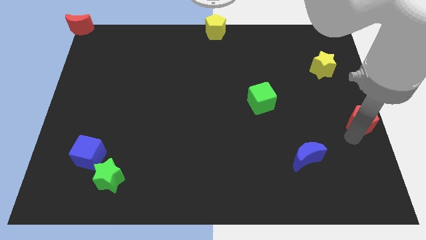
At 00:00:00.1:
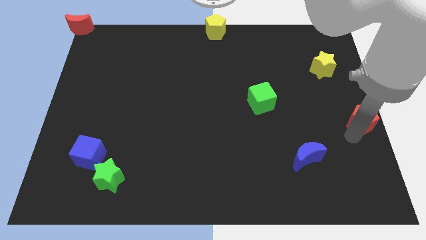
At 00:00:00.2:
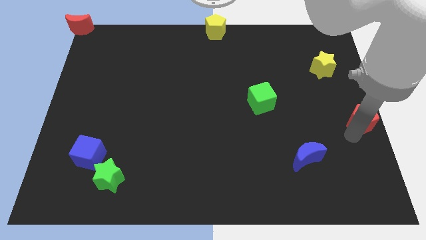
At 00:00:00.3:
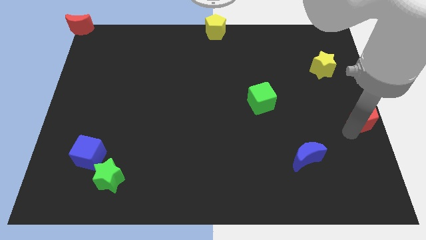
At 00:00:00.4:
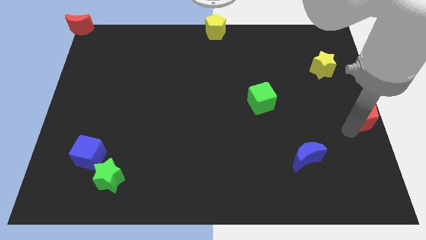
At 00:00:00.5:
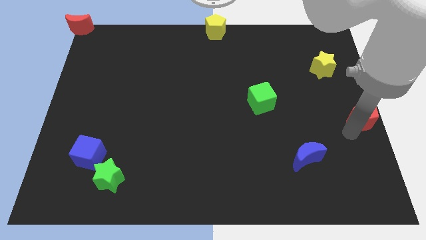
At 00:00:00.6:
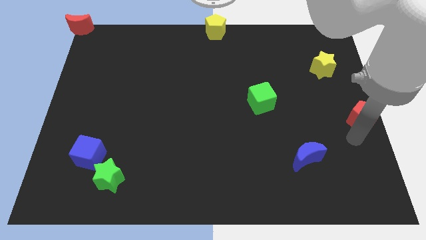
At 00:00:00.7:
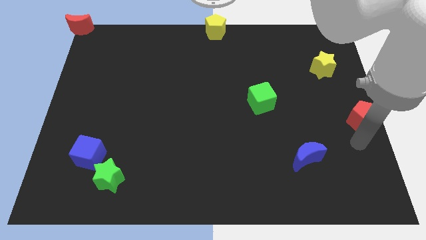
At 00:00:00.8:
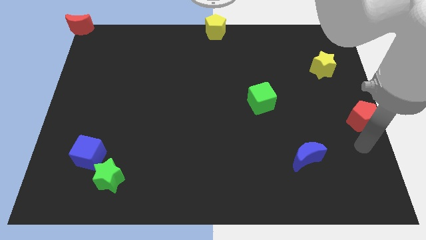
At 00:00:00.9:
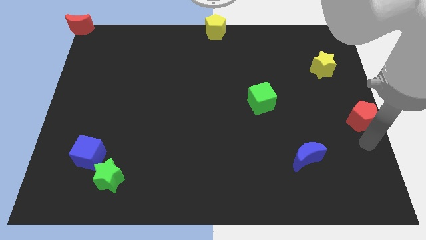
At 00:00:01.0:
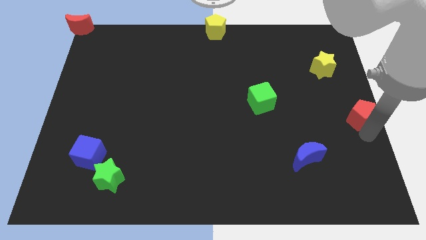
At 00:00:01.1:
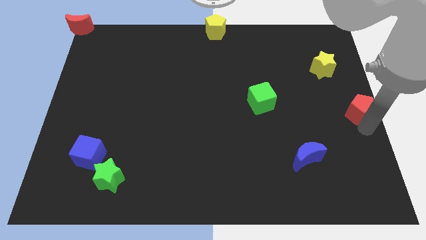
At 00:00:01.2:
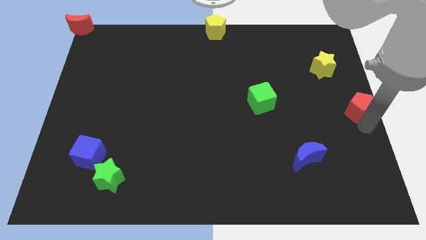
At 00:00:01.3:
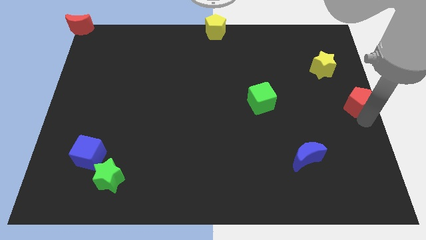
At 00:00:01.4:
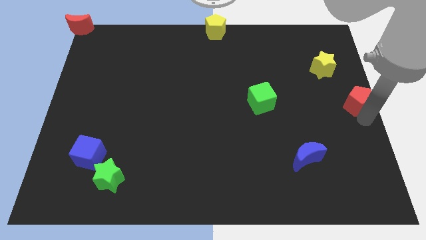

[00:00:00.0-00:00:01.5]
move the red pentagon right center of the board

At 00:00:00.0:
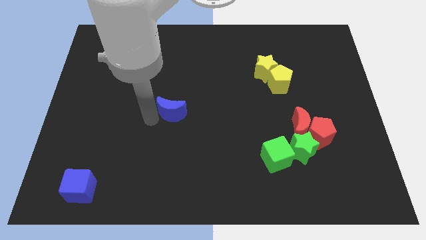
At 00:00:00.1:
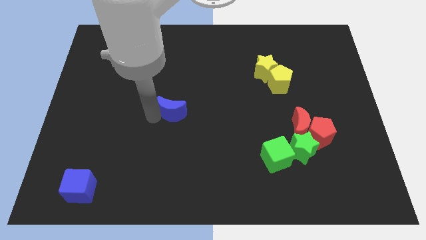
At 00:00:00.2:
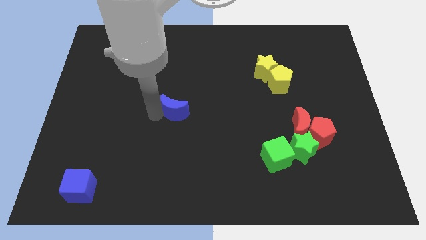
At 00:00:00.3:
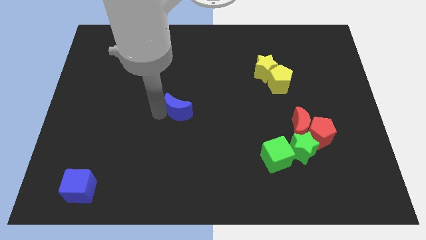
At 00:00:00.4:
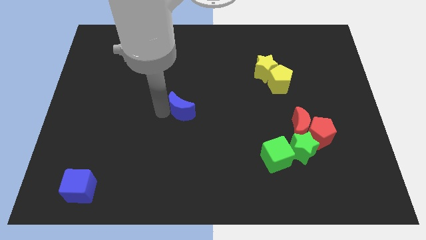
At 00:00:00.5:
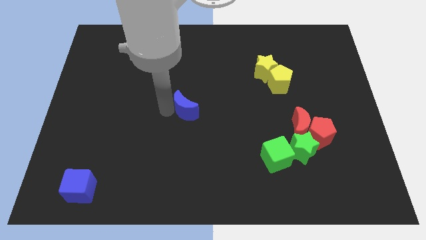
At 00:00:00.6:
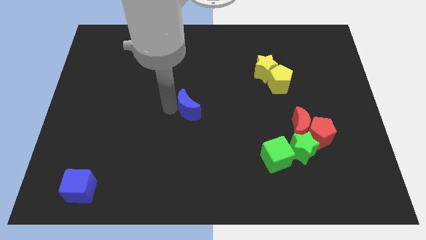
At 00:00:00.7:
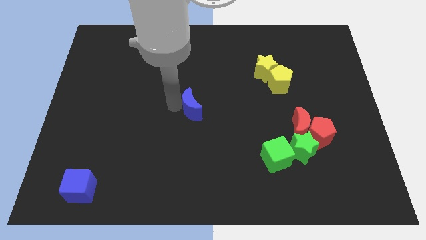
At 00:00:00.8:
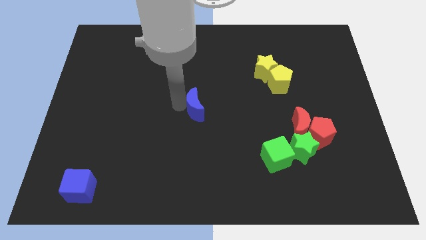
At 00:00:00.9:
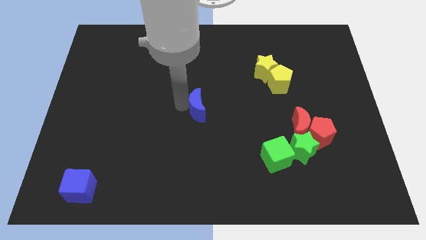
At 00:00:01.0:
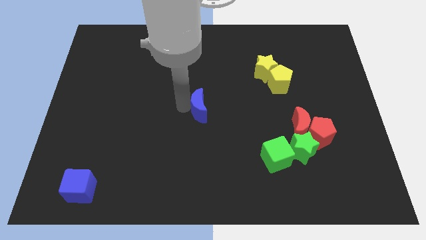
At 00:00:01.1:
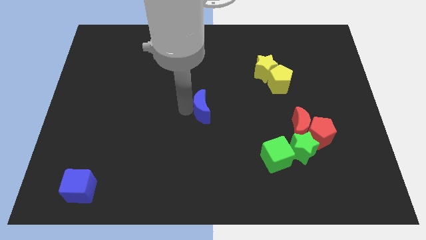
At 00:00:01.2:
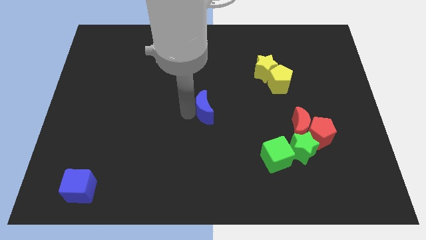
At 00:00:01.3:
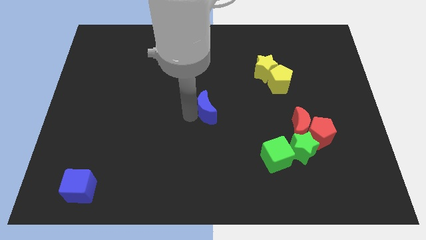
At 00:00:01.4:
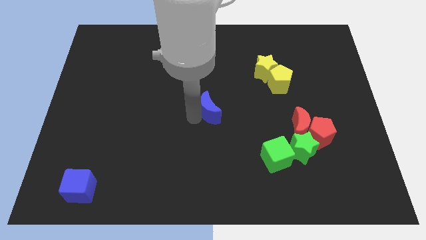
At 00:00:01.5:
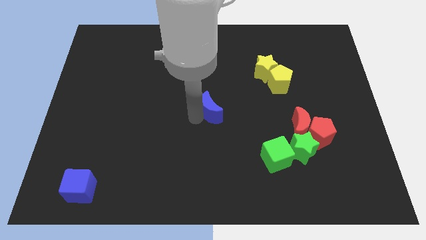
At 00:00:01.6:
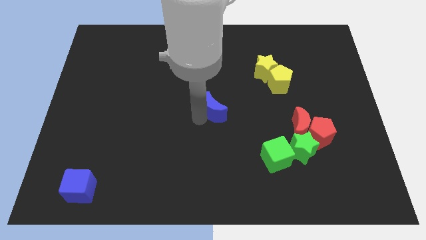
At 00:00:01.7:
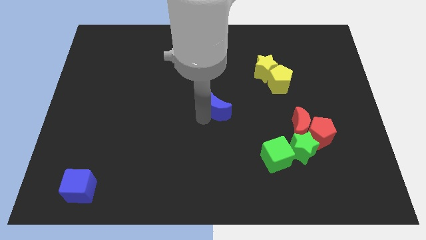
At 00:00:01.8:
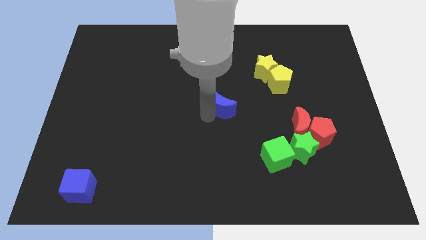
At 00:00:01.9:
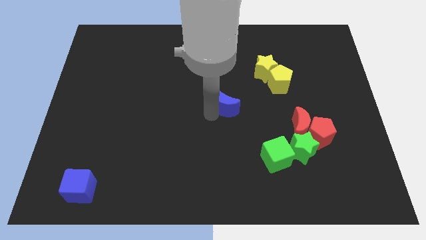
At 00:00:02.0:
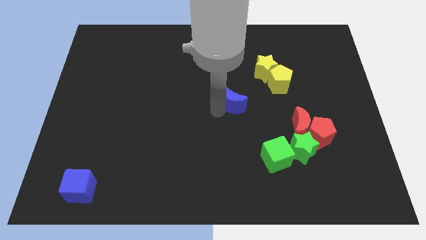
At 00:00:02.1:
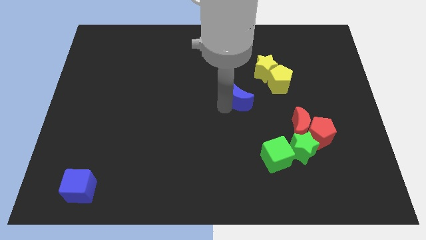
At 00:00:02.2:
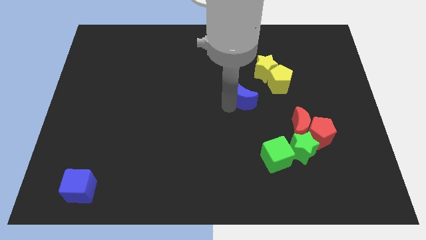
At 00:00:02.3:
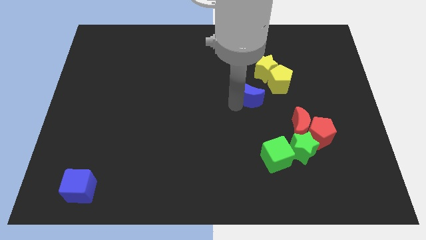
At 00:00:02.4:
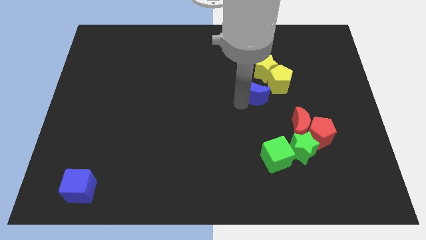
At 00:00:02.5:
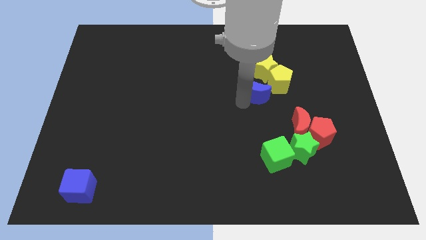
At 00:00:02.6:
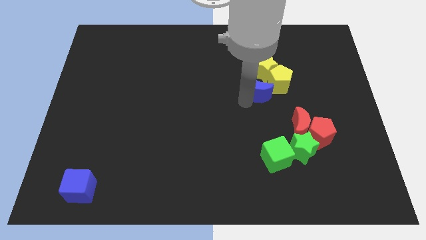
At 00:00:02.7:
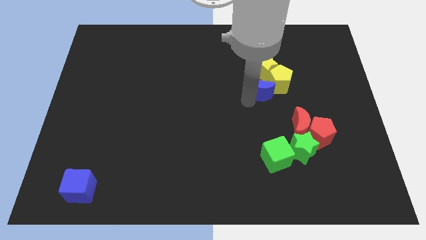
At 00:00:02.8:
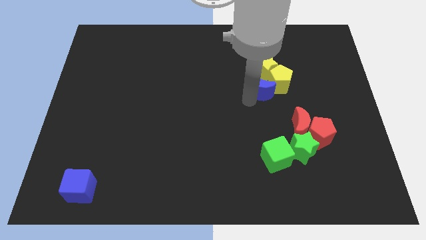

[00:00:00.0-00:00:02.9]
place the blue moon left to the yellow blocks

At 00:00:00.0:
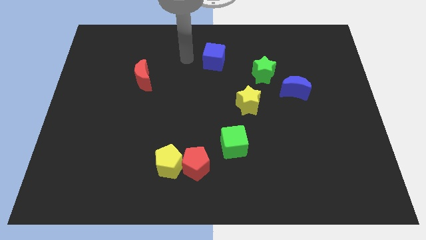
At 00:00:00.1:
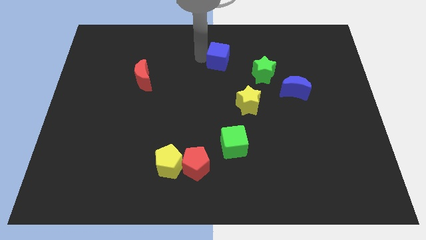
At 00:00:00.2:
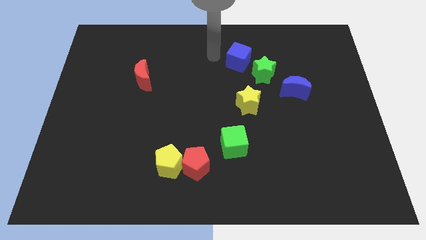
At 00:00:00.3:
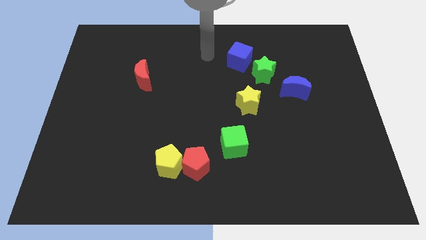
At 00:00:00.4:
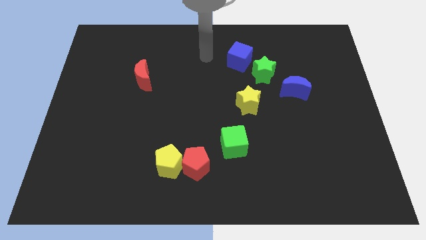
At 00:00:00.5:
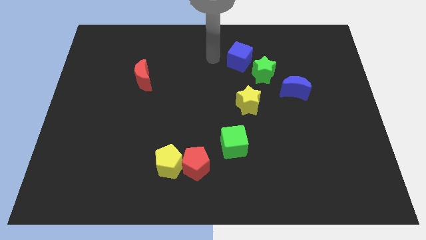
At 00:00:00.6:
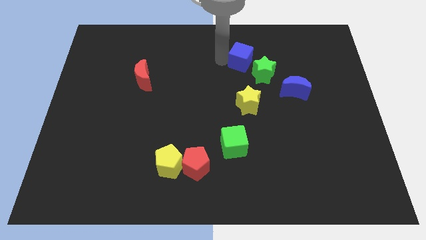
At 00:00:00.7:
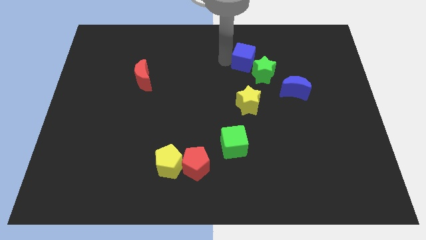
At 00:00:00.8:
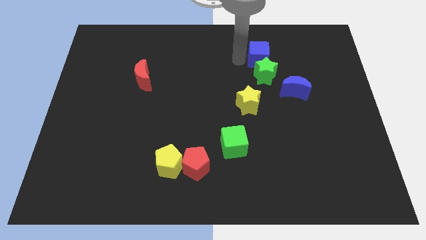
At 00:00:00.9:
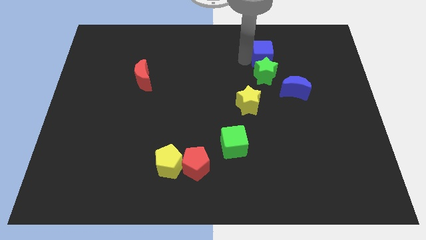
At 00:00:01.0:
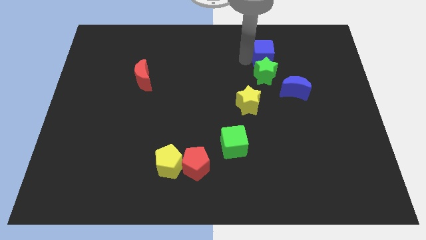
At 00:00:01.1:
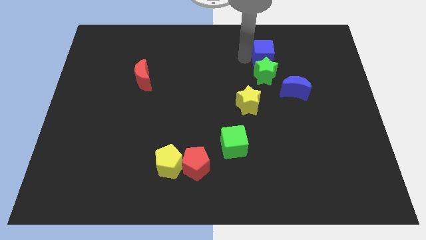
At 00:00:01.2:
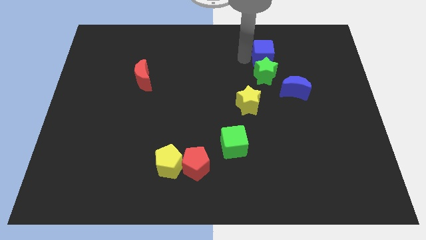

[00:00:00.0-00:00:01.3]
place the blue cube to the top side of the green star

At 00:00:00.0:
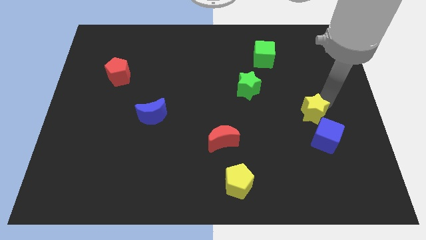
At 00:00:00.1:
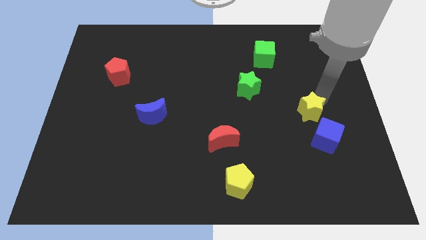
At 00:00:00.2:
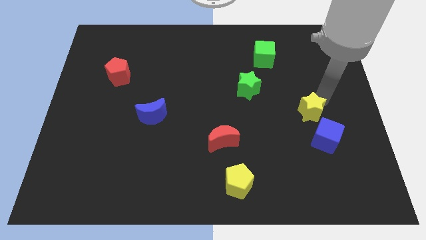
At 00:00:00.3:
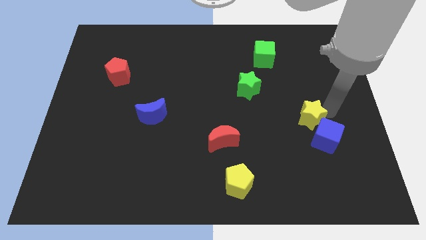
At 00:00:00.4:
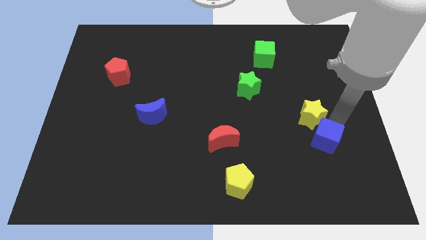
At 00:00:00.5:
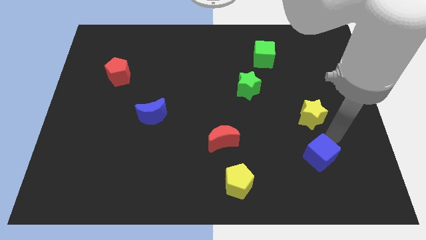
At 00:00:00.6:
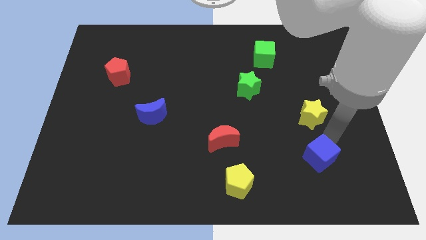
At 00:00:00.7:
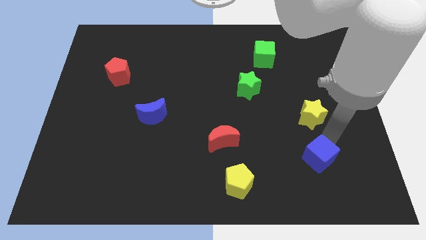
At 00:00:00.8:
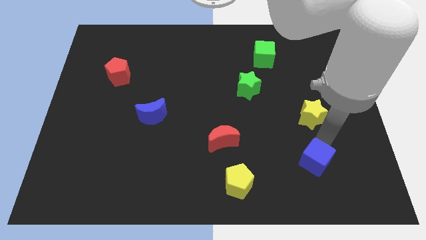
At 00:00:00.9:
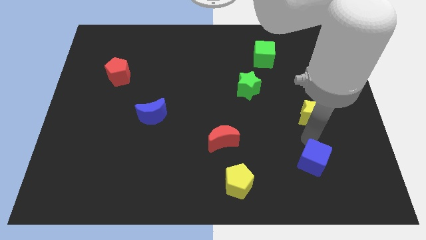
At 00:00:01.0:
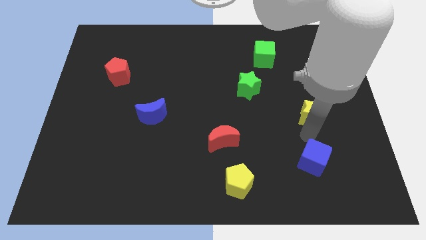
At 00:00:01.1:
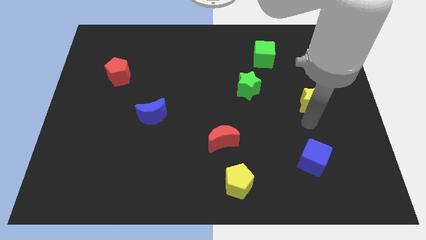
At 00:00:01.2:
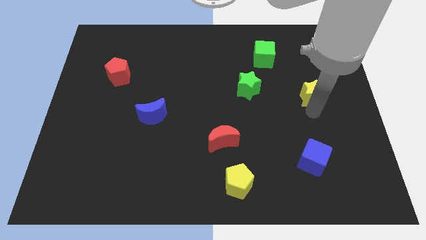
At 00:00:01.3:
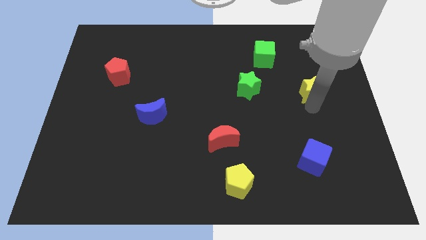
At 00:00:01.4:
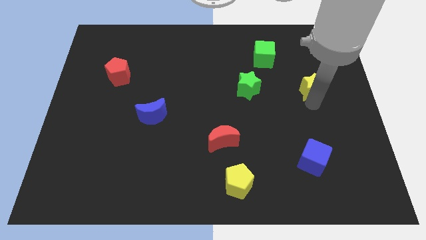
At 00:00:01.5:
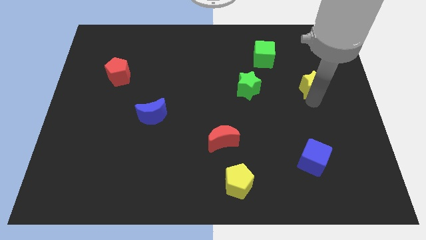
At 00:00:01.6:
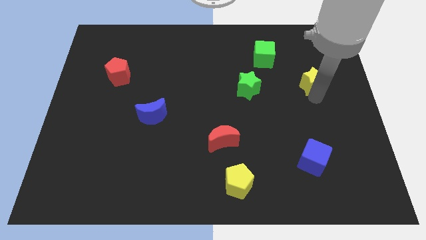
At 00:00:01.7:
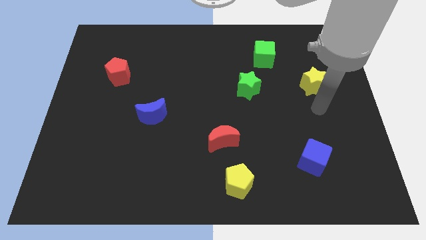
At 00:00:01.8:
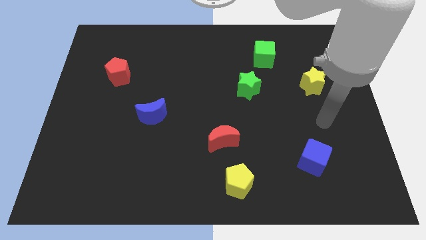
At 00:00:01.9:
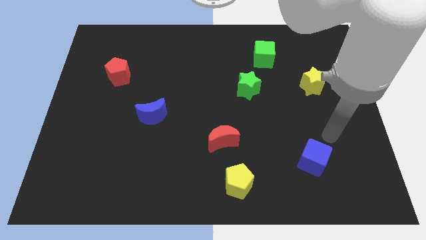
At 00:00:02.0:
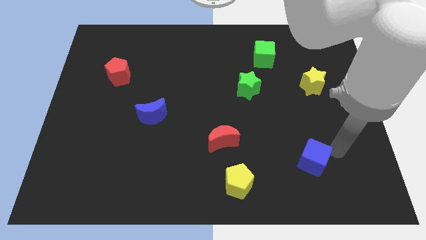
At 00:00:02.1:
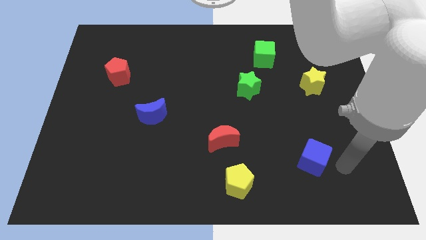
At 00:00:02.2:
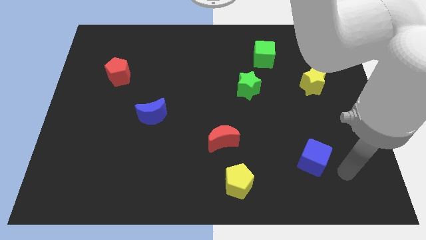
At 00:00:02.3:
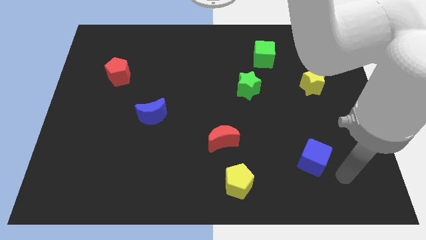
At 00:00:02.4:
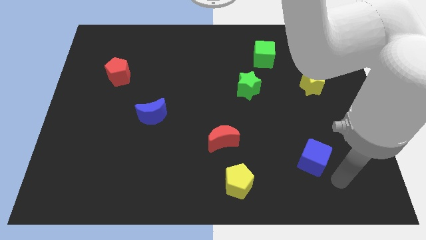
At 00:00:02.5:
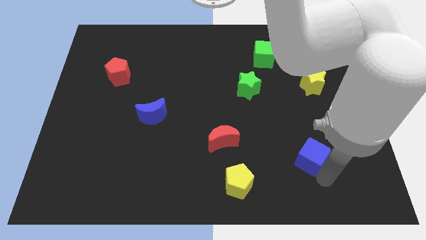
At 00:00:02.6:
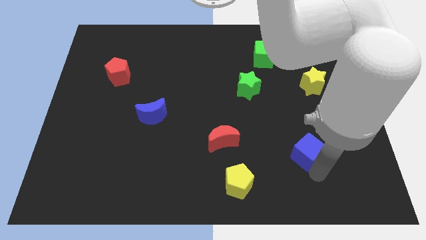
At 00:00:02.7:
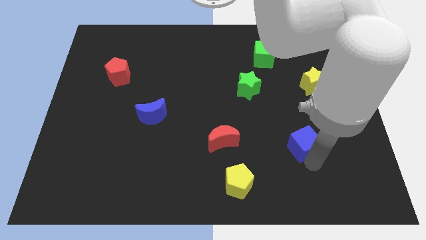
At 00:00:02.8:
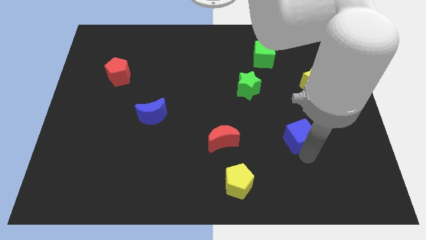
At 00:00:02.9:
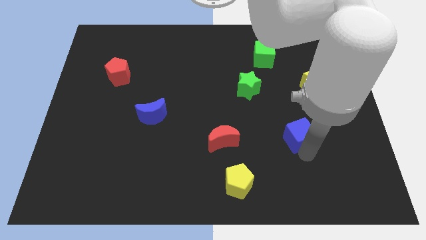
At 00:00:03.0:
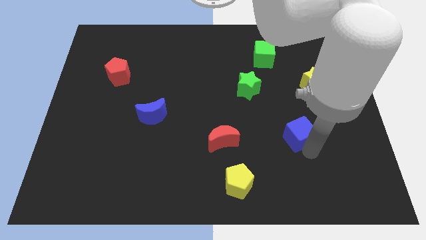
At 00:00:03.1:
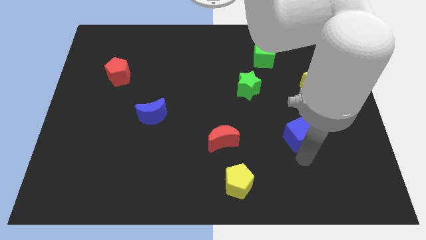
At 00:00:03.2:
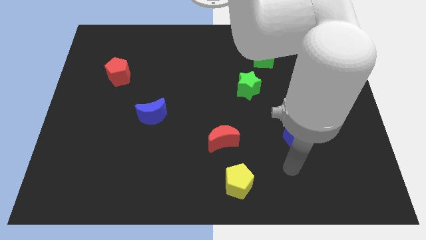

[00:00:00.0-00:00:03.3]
push the yellow star and blue cube towards the top side of the board
